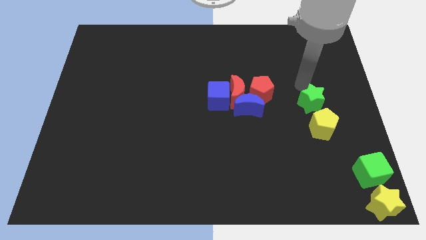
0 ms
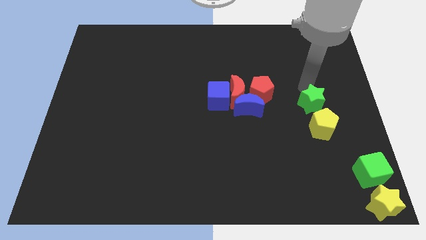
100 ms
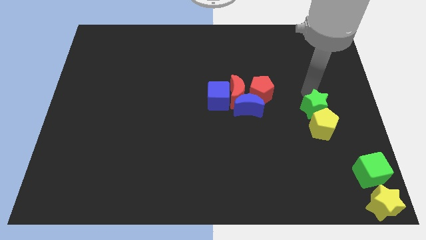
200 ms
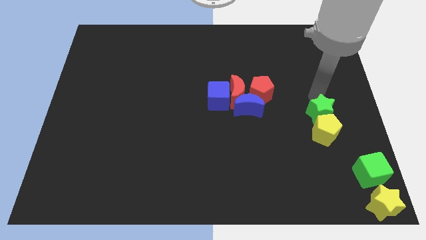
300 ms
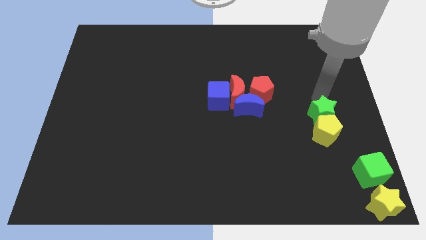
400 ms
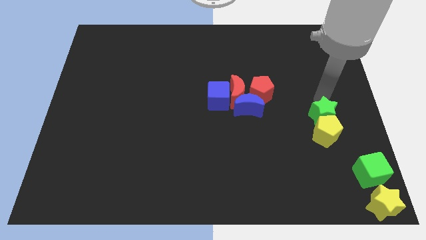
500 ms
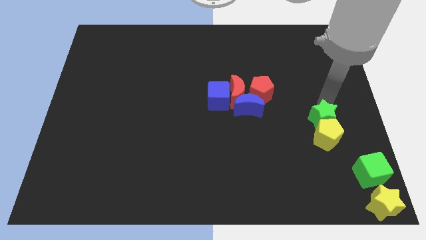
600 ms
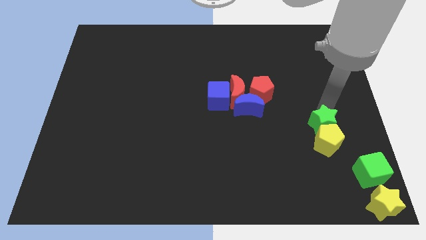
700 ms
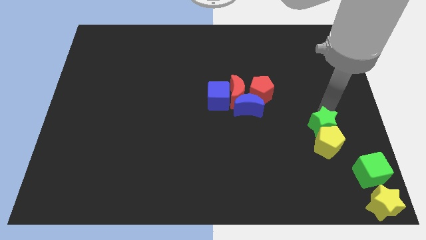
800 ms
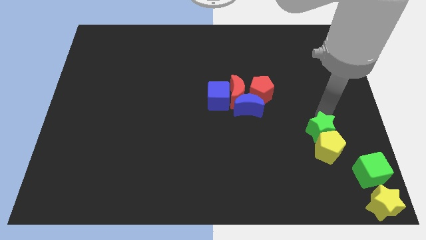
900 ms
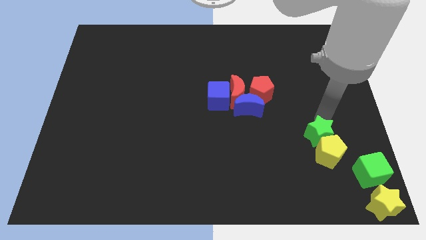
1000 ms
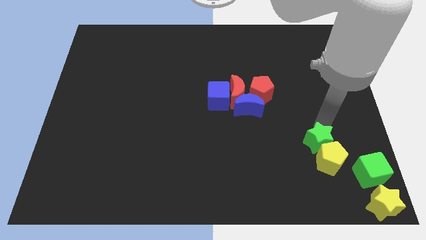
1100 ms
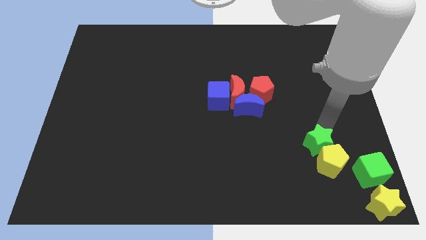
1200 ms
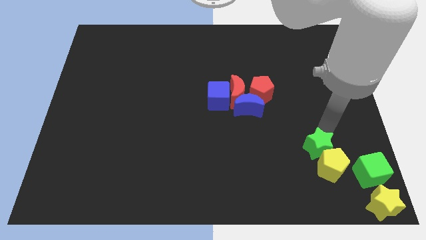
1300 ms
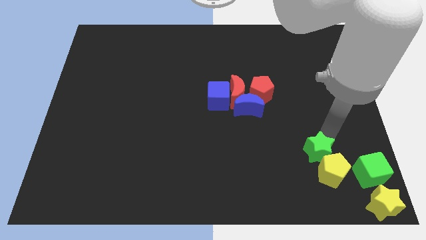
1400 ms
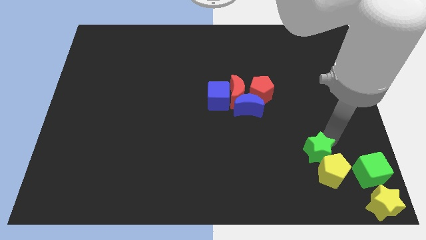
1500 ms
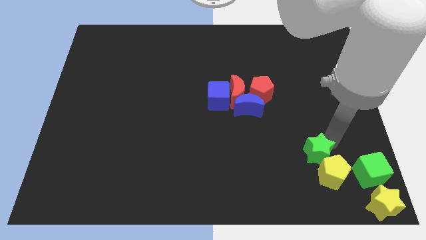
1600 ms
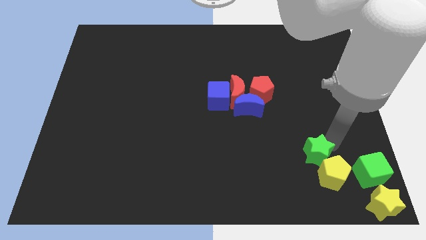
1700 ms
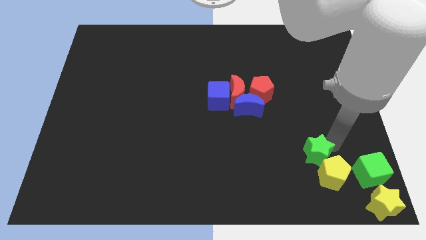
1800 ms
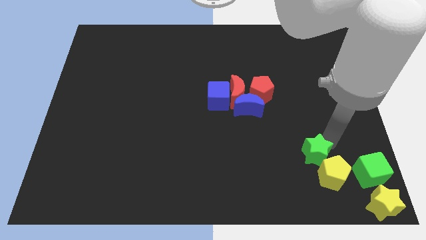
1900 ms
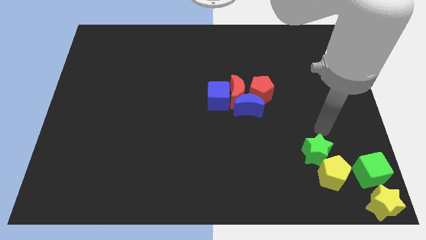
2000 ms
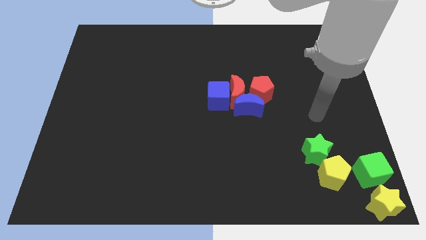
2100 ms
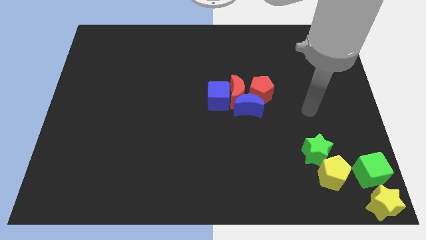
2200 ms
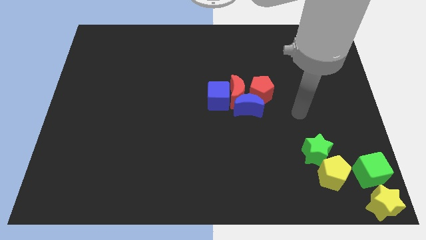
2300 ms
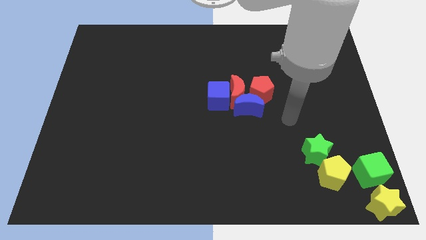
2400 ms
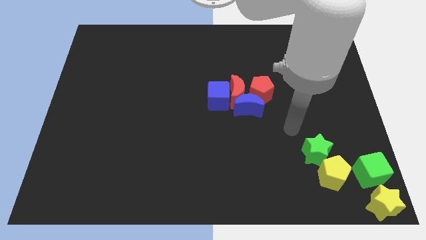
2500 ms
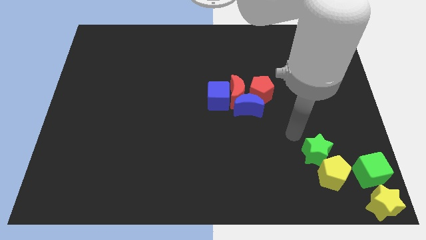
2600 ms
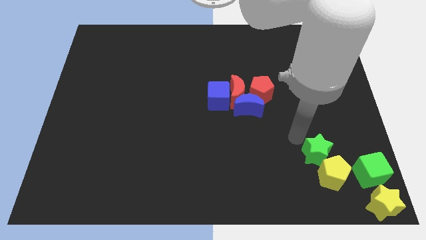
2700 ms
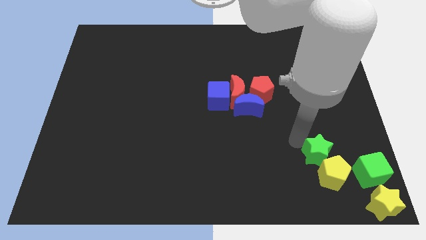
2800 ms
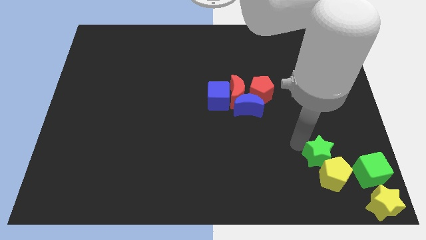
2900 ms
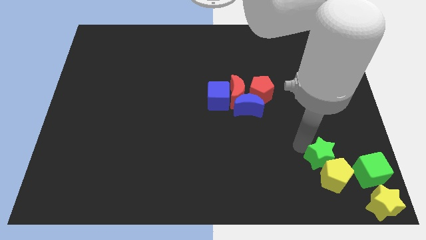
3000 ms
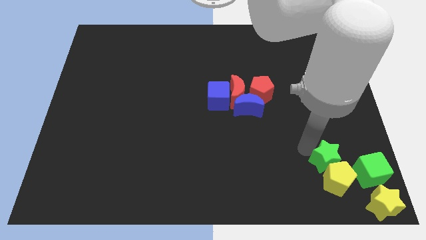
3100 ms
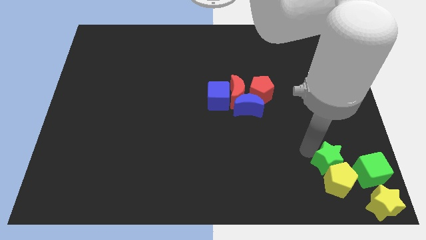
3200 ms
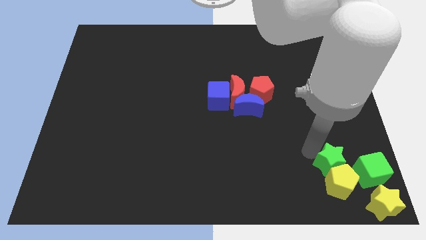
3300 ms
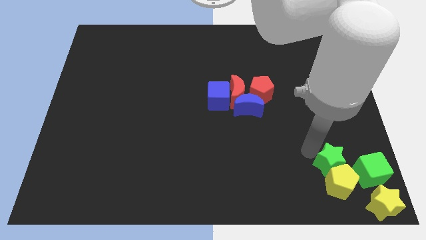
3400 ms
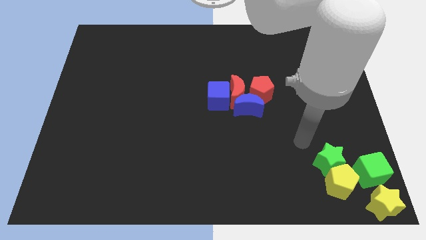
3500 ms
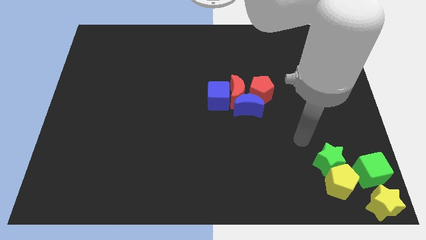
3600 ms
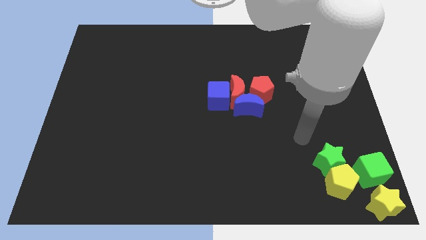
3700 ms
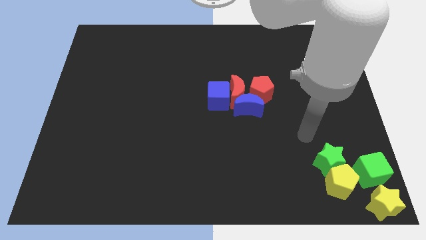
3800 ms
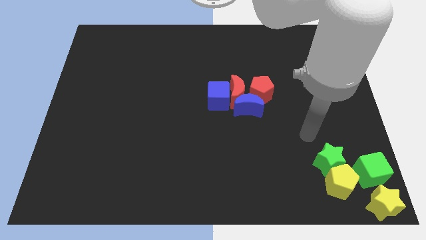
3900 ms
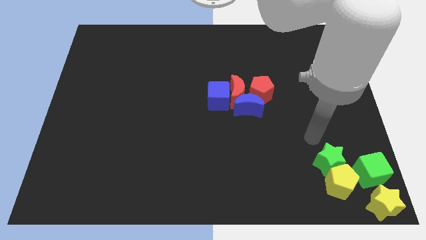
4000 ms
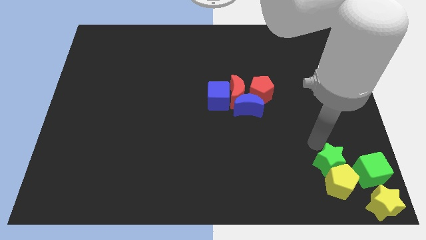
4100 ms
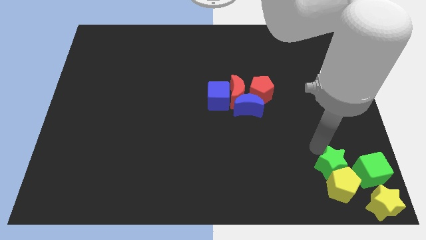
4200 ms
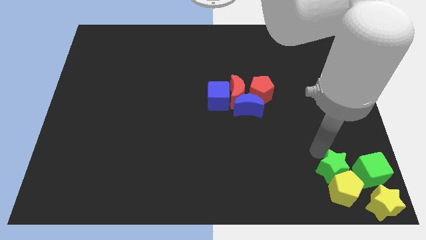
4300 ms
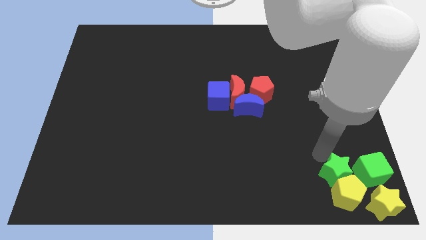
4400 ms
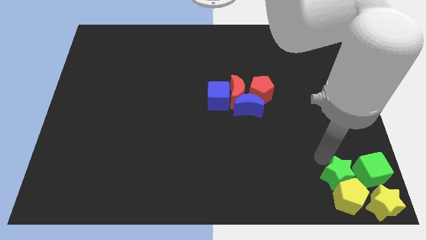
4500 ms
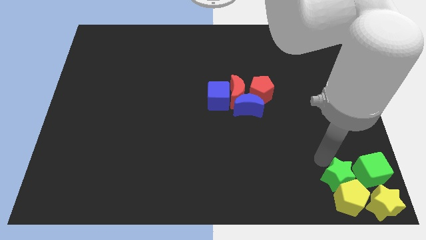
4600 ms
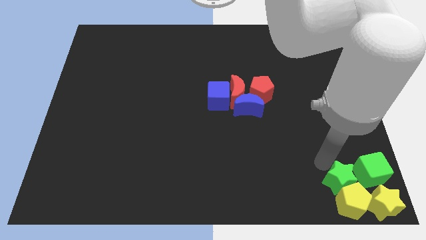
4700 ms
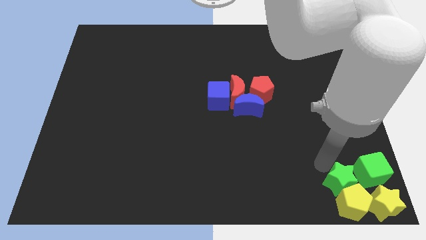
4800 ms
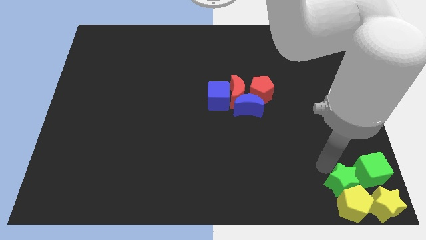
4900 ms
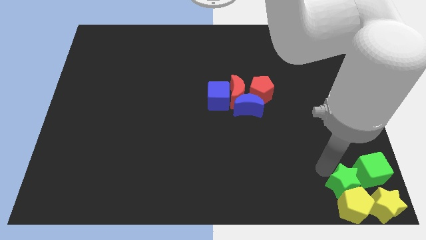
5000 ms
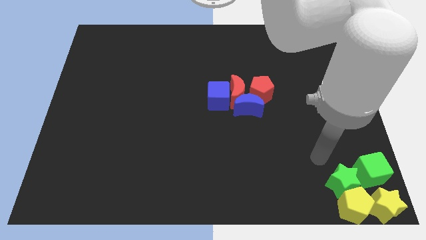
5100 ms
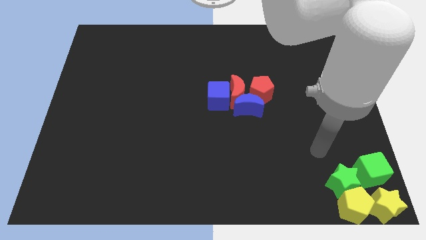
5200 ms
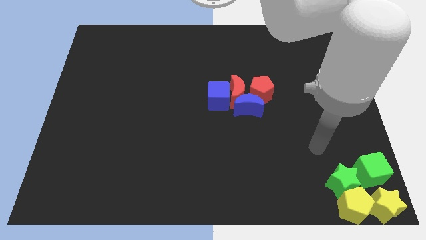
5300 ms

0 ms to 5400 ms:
push the yellow pentagon and green star to the bottom right

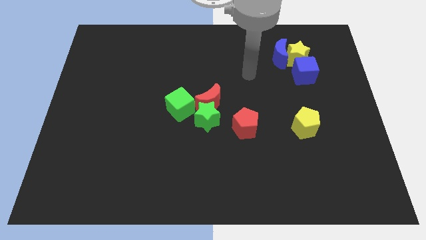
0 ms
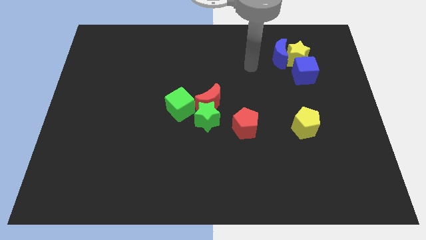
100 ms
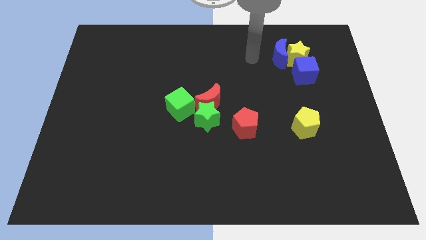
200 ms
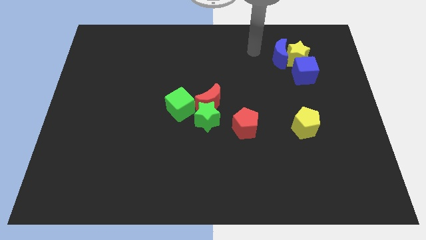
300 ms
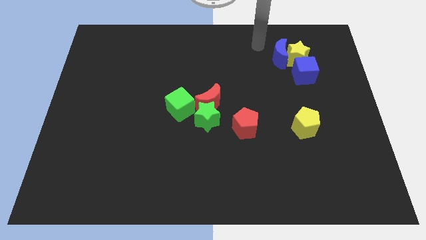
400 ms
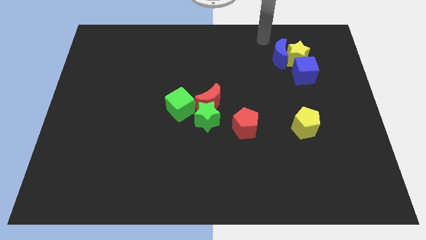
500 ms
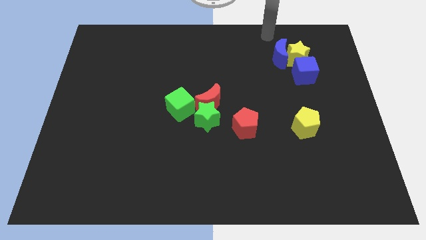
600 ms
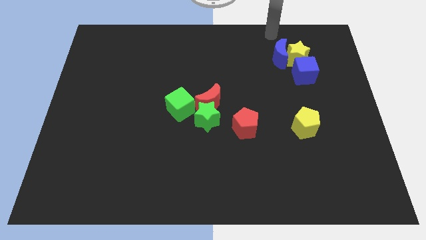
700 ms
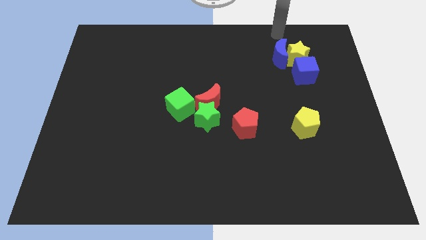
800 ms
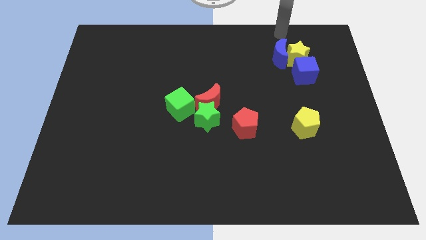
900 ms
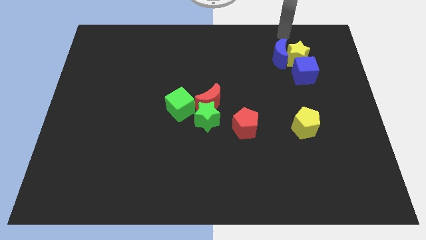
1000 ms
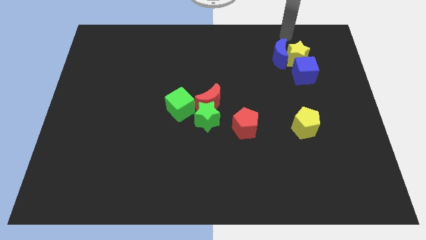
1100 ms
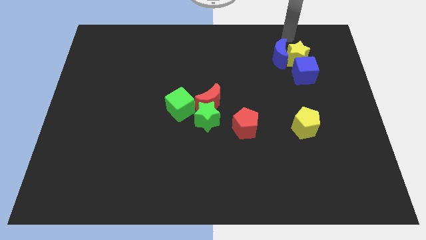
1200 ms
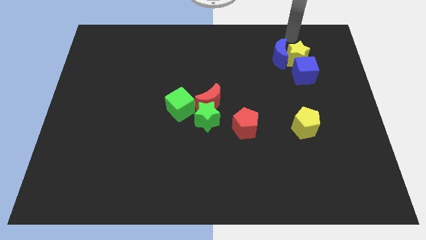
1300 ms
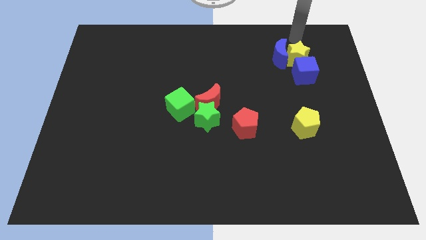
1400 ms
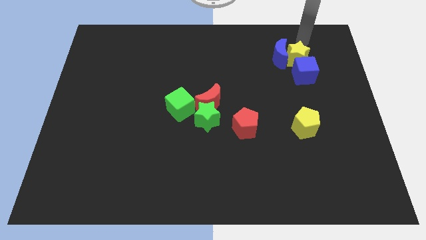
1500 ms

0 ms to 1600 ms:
move your arm on the top of the yellow star

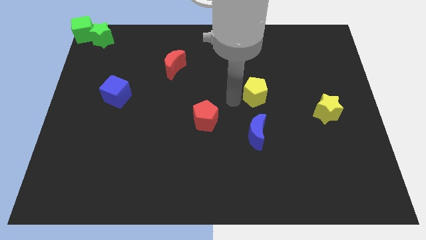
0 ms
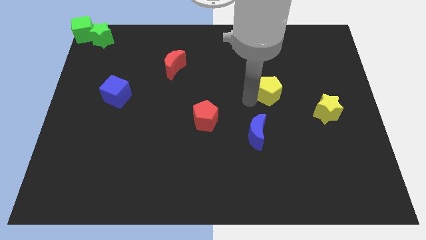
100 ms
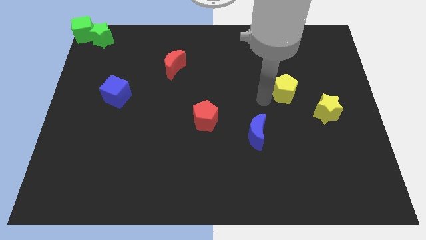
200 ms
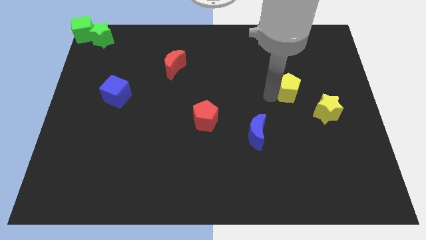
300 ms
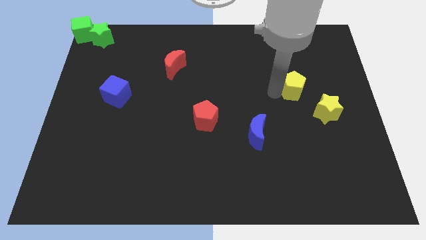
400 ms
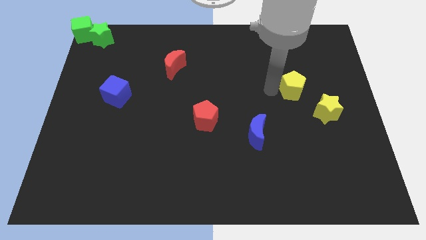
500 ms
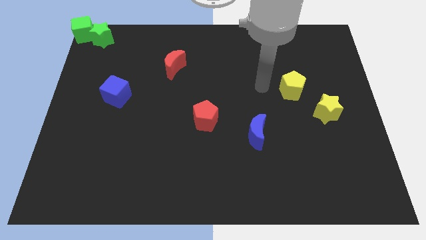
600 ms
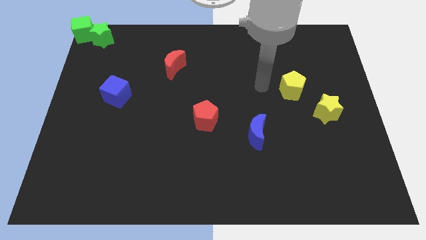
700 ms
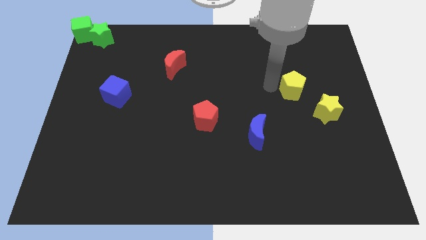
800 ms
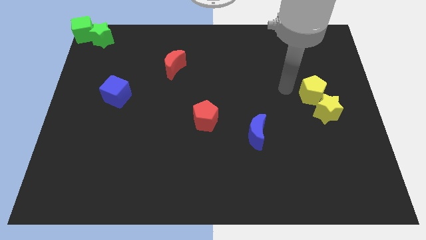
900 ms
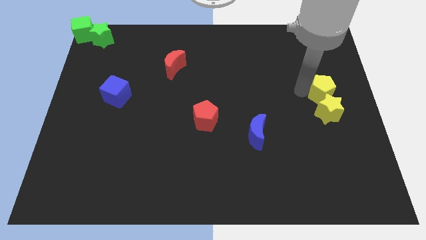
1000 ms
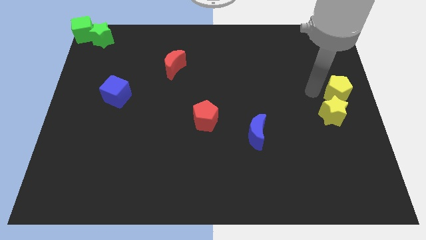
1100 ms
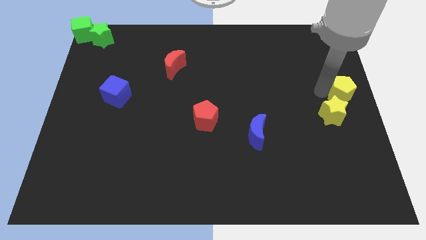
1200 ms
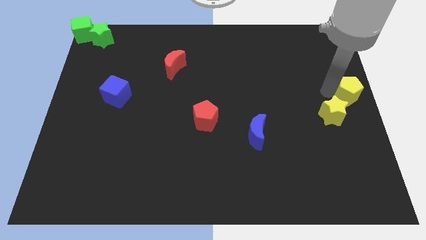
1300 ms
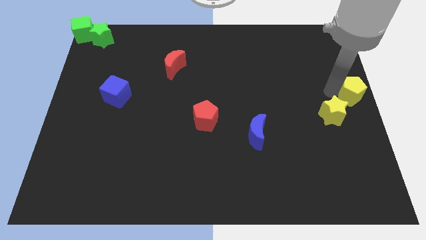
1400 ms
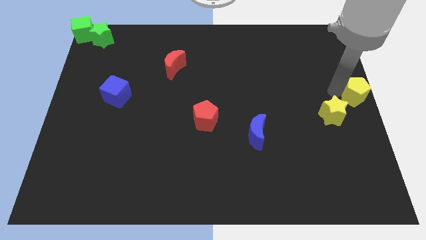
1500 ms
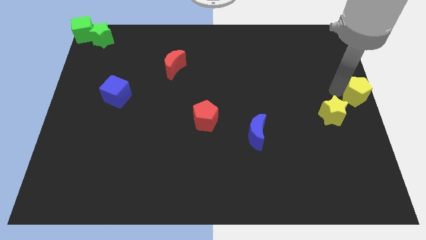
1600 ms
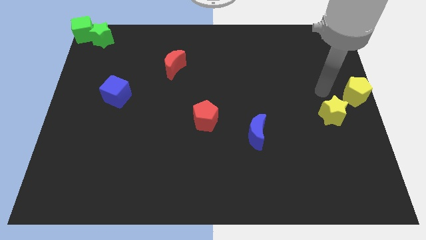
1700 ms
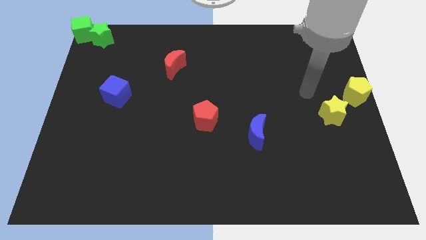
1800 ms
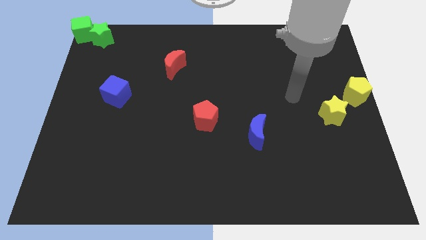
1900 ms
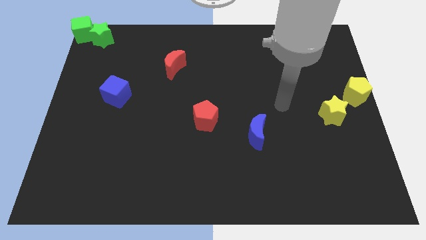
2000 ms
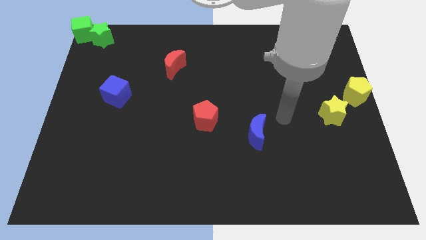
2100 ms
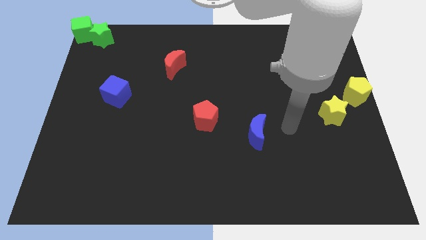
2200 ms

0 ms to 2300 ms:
push the yellow pentagon towards the center right side of the board
